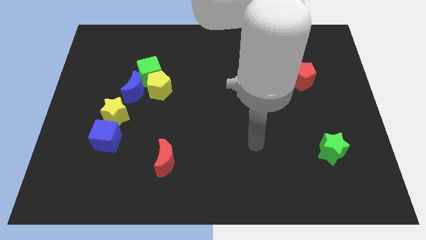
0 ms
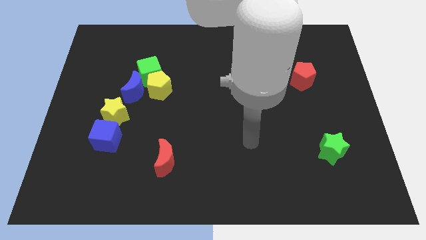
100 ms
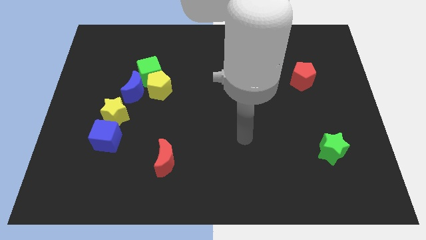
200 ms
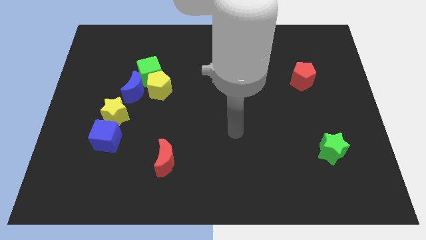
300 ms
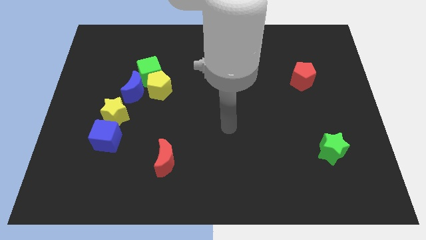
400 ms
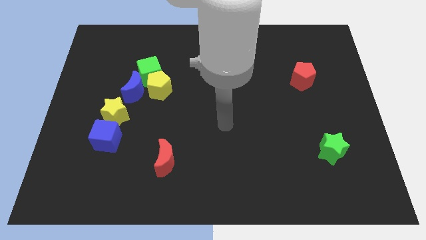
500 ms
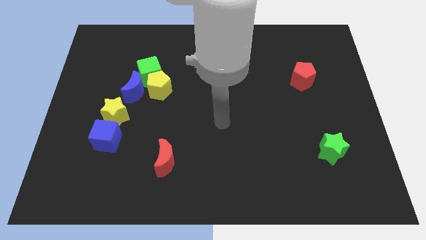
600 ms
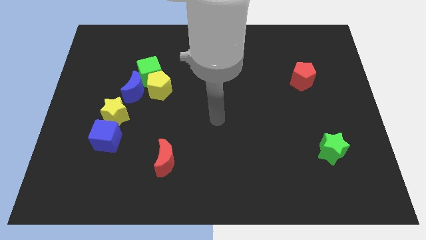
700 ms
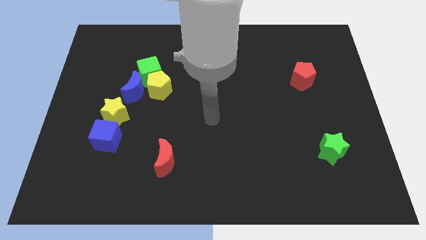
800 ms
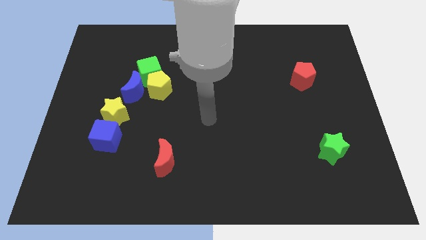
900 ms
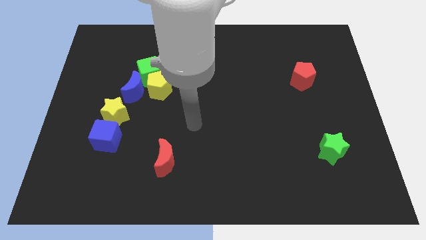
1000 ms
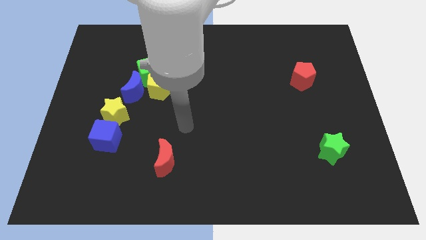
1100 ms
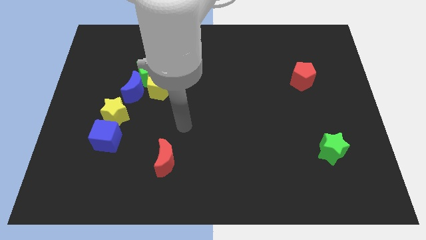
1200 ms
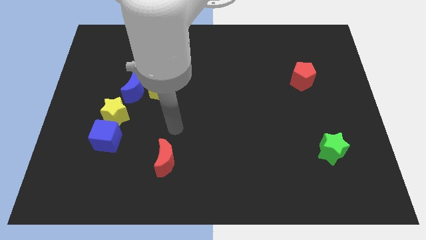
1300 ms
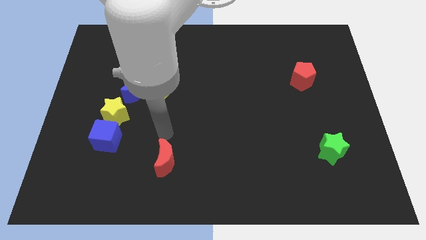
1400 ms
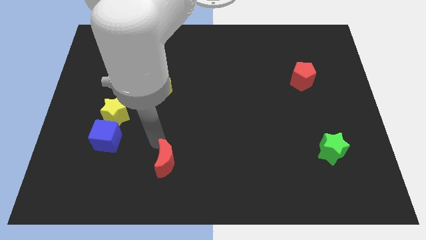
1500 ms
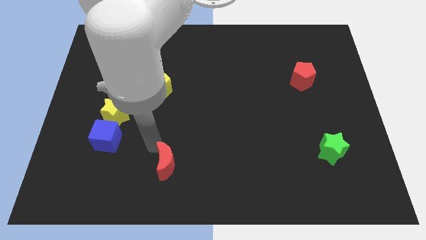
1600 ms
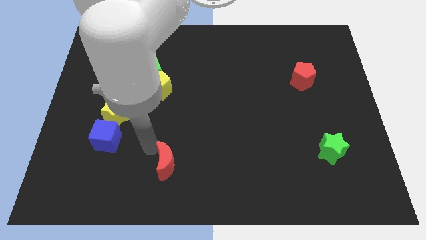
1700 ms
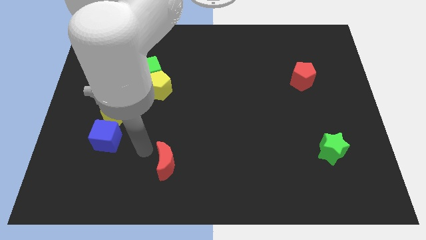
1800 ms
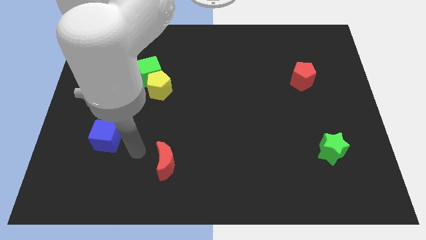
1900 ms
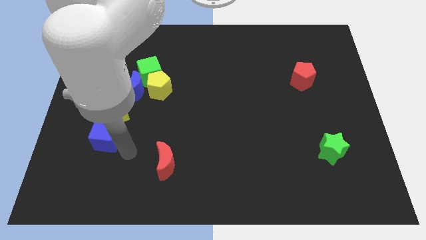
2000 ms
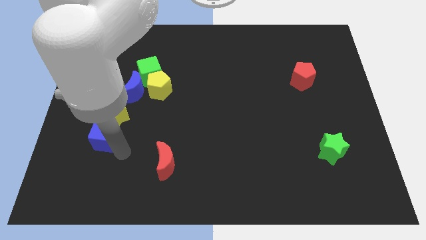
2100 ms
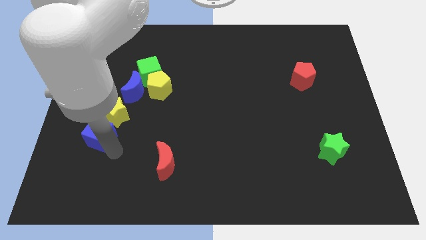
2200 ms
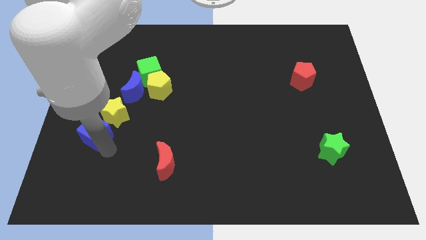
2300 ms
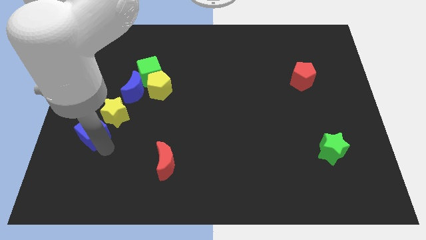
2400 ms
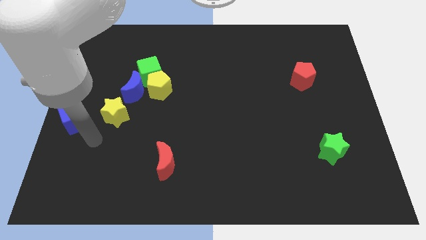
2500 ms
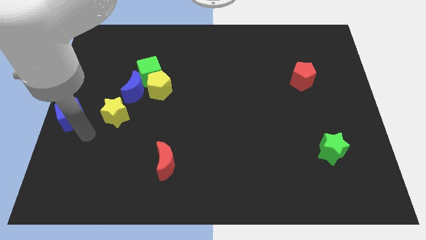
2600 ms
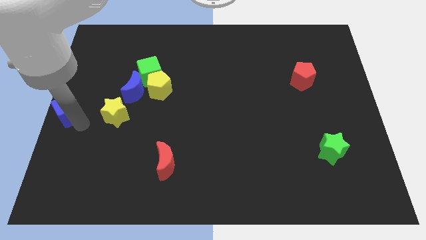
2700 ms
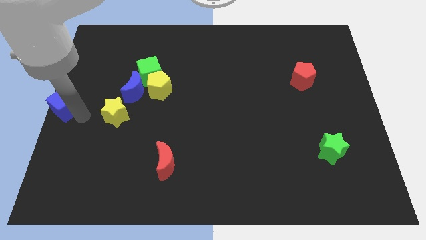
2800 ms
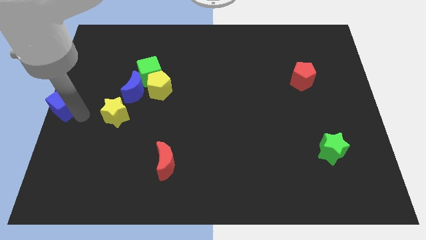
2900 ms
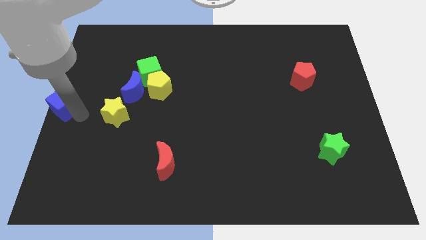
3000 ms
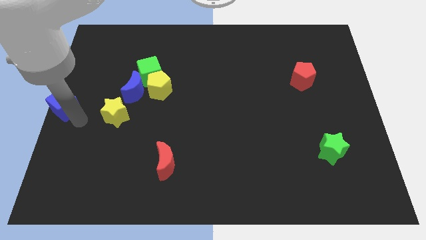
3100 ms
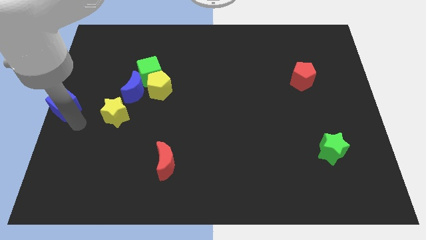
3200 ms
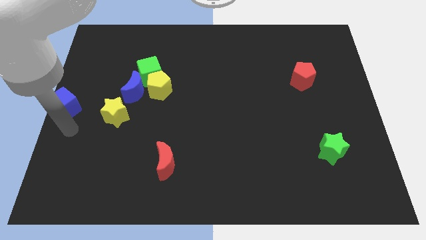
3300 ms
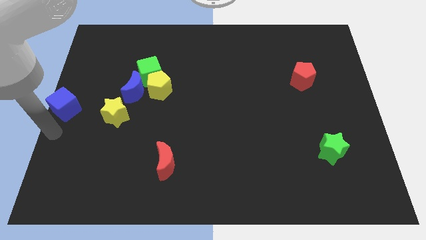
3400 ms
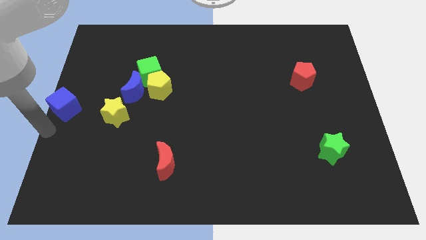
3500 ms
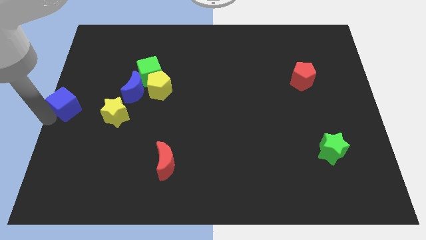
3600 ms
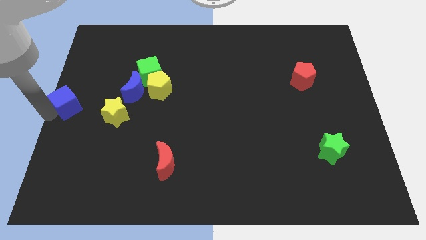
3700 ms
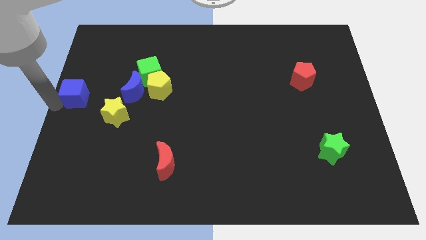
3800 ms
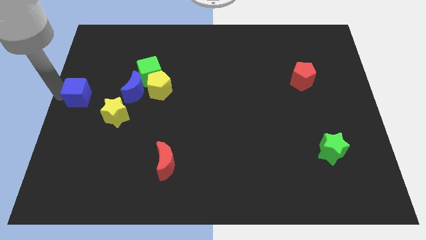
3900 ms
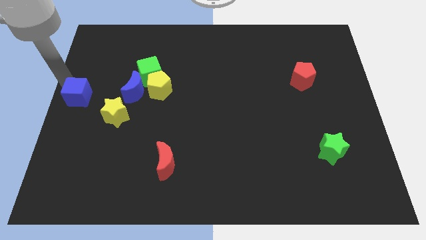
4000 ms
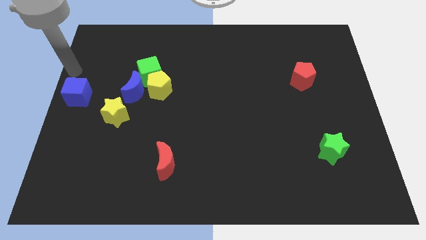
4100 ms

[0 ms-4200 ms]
place the blue cube to the center left side of the board

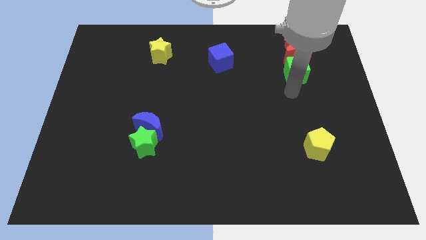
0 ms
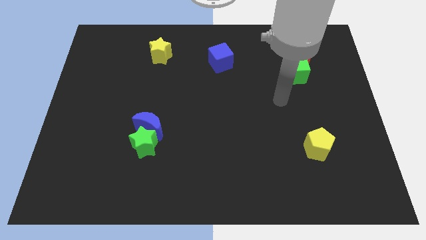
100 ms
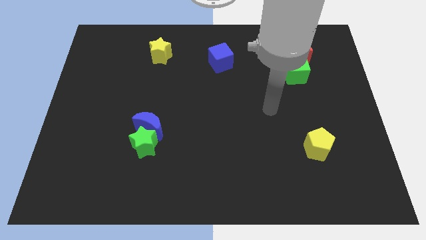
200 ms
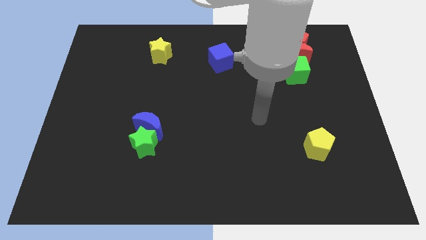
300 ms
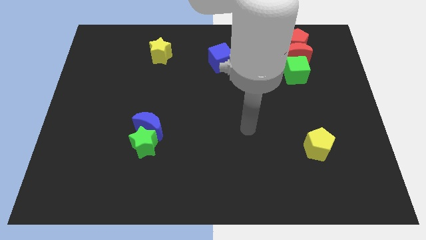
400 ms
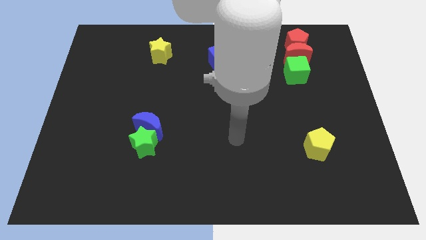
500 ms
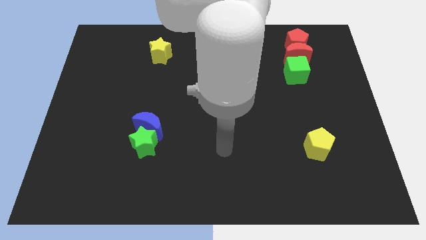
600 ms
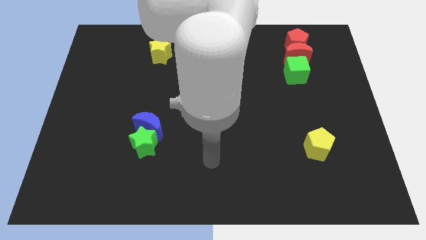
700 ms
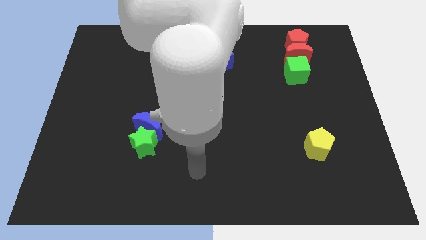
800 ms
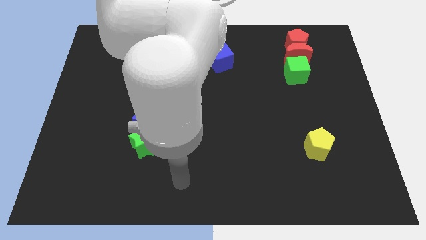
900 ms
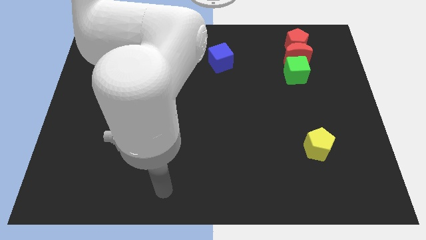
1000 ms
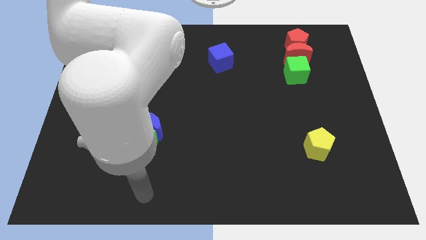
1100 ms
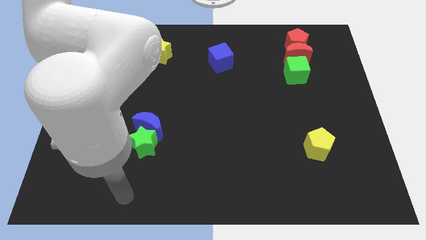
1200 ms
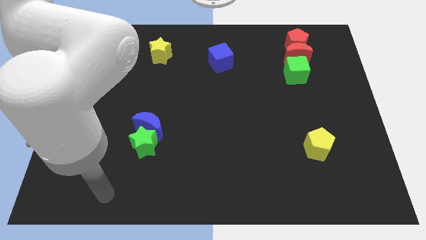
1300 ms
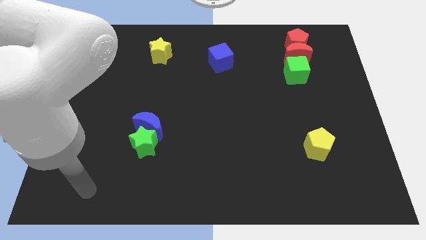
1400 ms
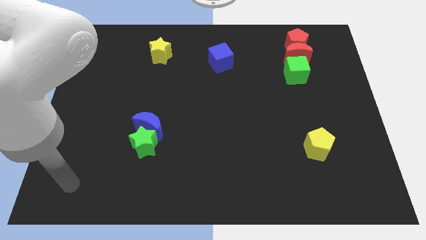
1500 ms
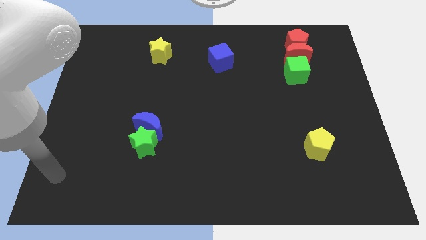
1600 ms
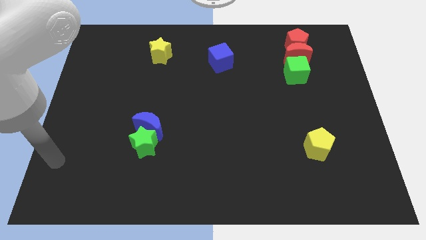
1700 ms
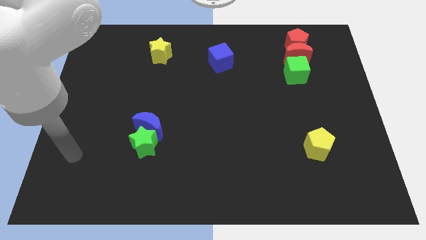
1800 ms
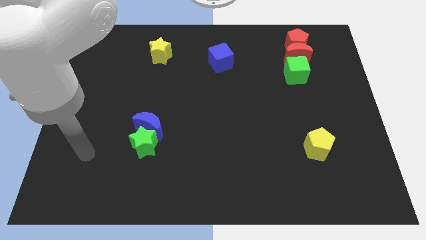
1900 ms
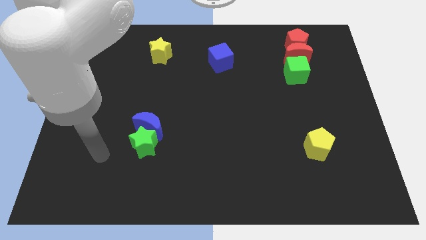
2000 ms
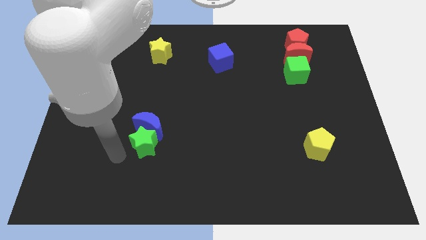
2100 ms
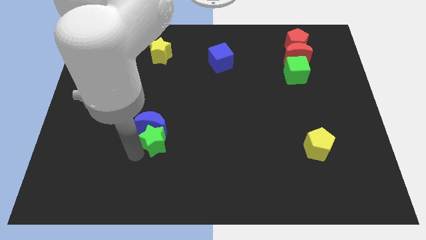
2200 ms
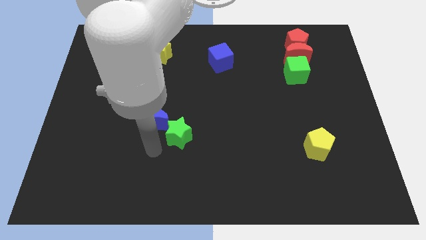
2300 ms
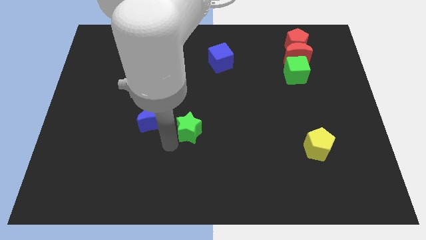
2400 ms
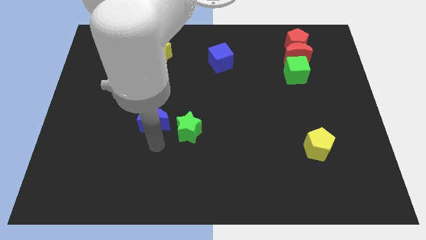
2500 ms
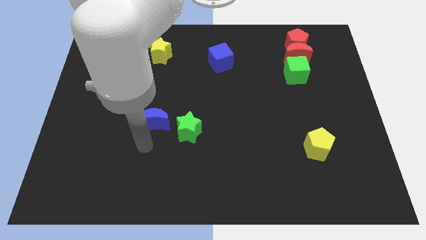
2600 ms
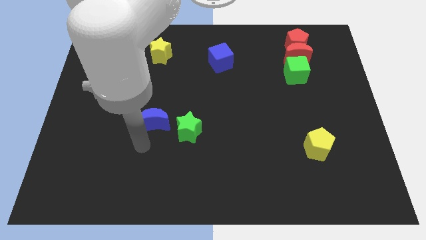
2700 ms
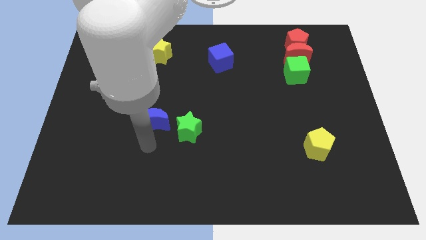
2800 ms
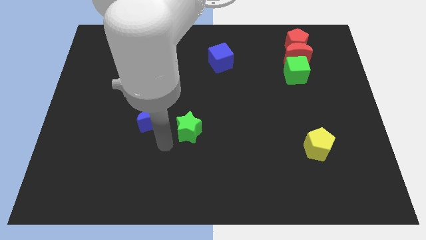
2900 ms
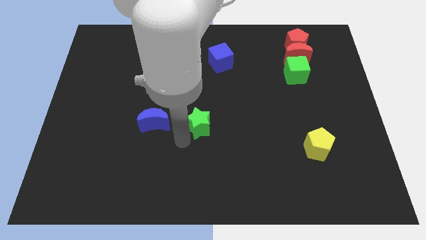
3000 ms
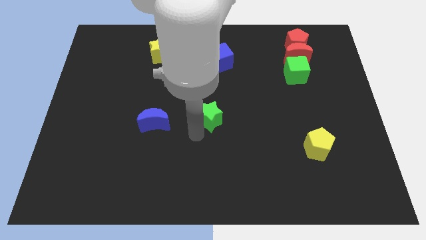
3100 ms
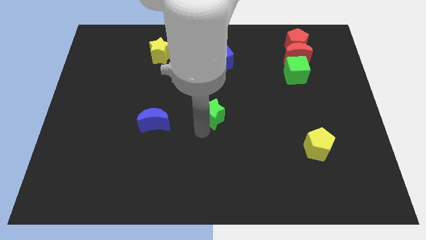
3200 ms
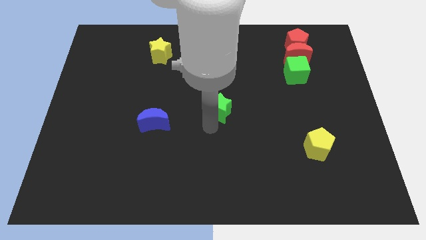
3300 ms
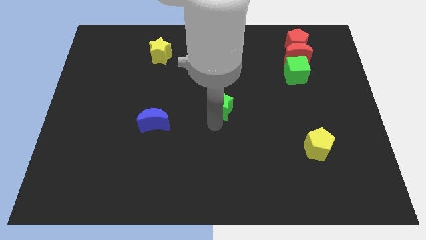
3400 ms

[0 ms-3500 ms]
separate the green star from the blue moon

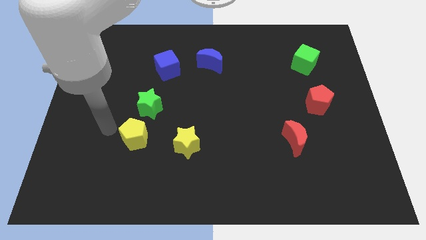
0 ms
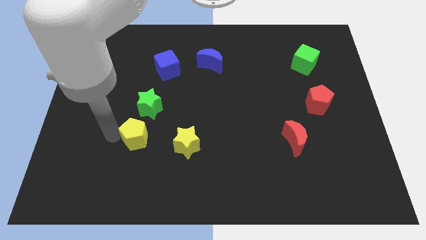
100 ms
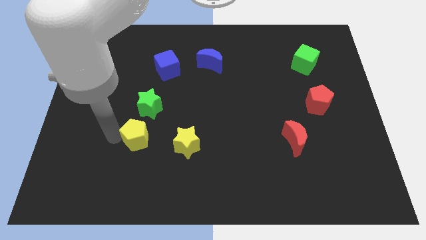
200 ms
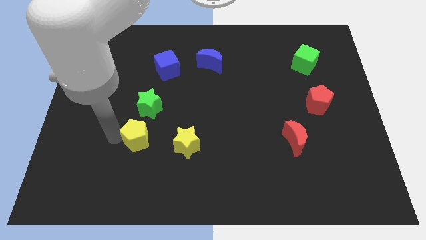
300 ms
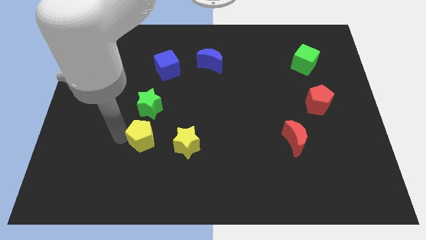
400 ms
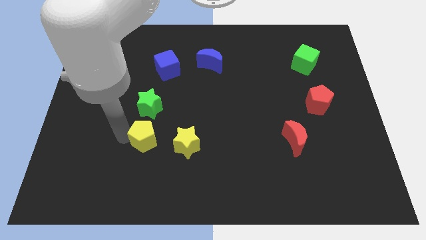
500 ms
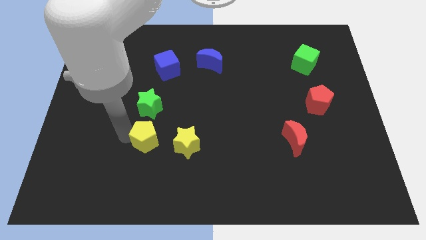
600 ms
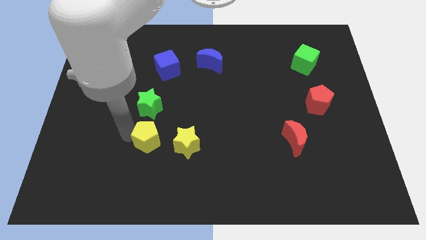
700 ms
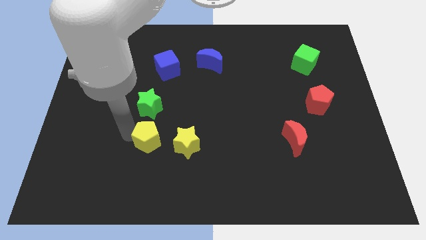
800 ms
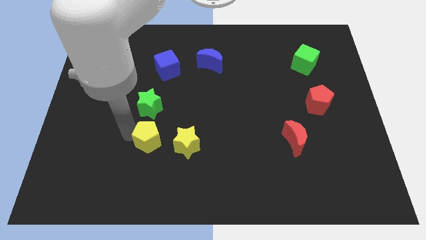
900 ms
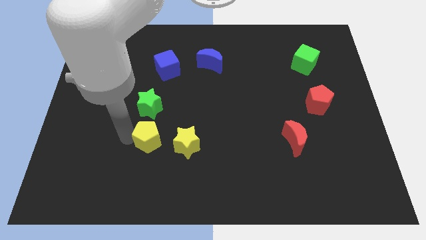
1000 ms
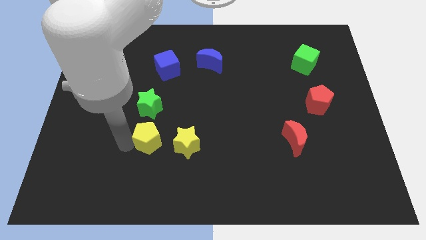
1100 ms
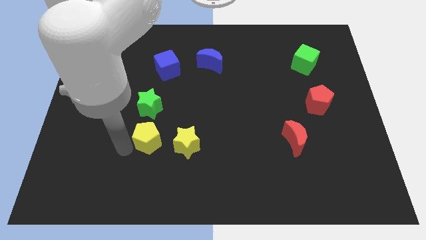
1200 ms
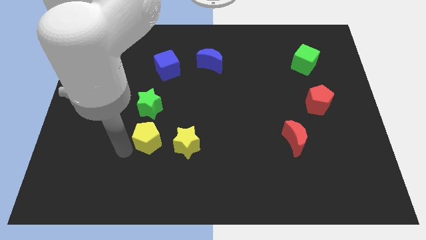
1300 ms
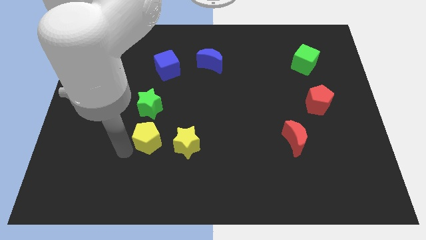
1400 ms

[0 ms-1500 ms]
move the yellow pentagon close to the yellow star
